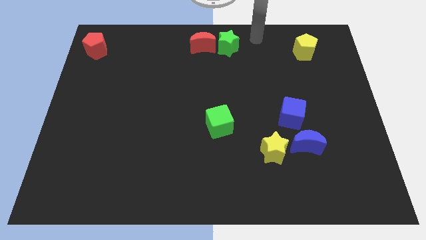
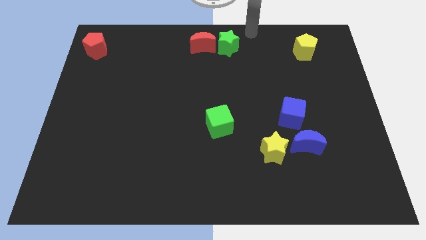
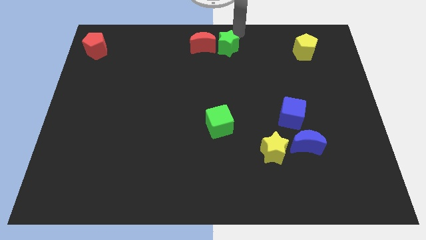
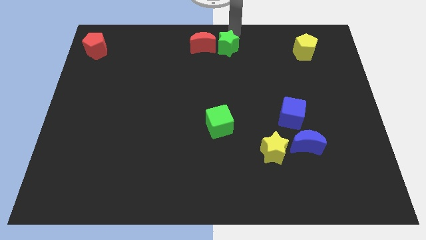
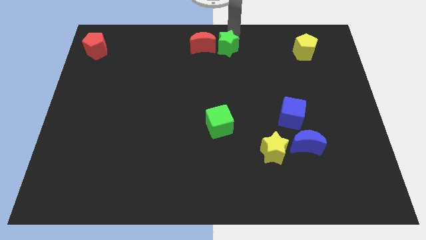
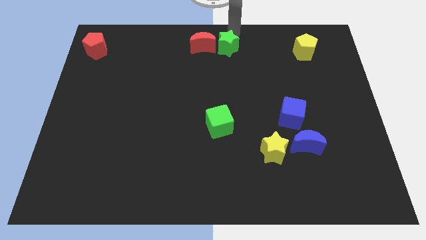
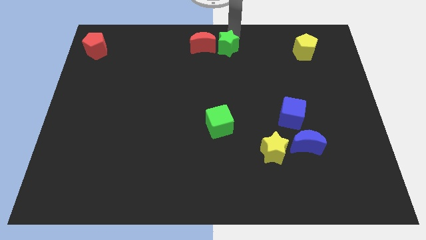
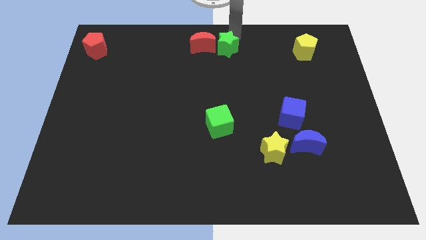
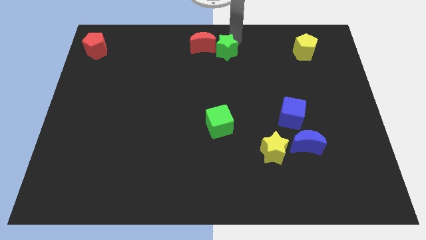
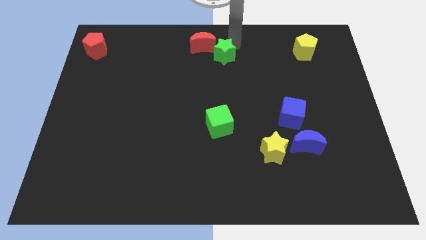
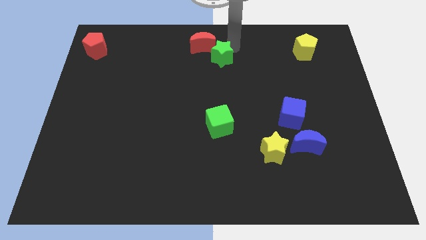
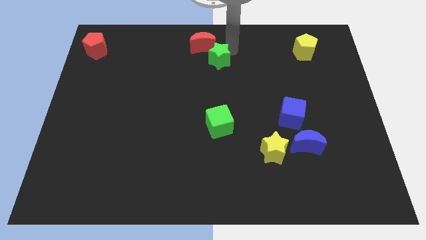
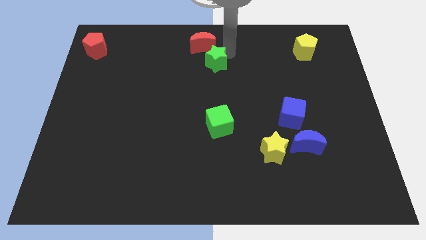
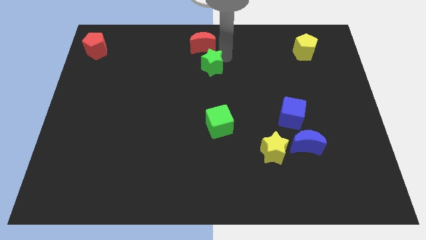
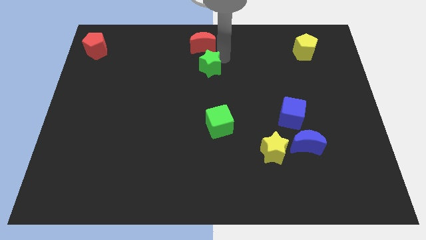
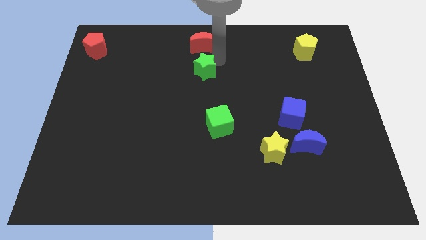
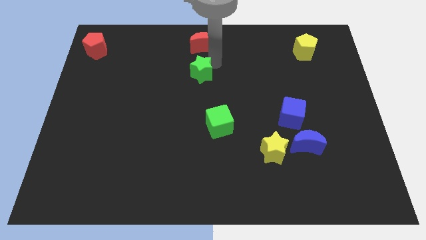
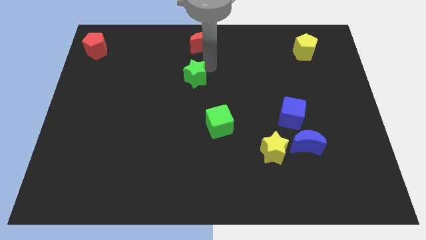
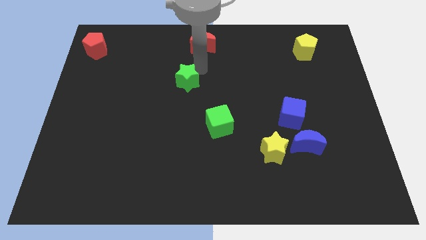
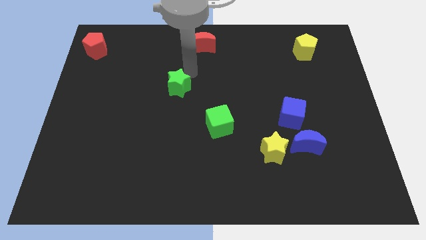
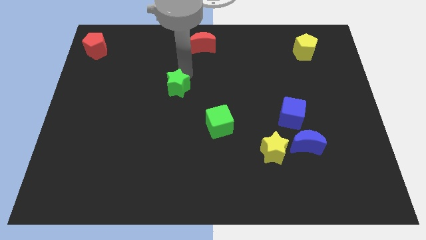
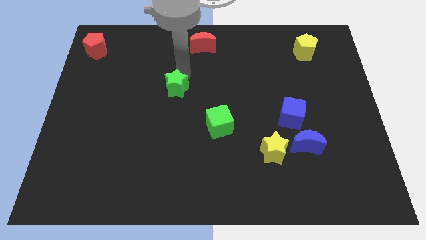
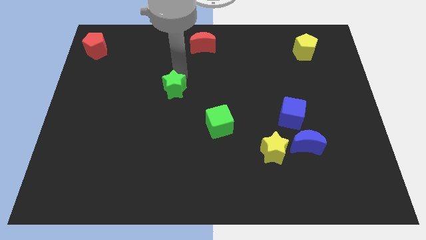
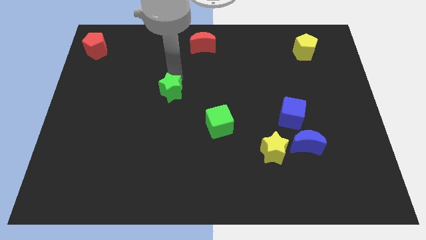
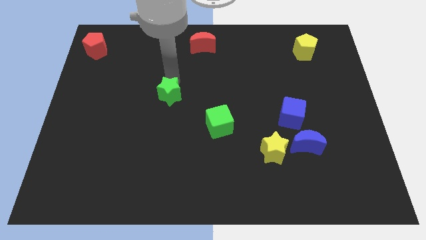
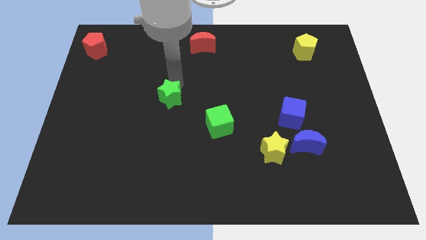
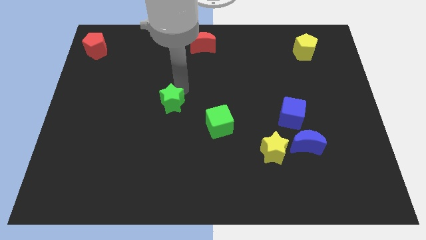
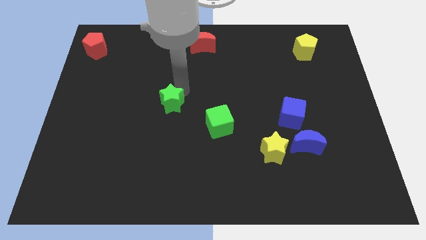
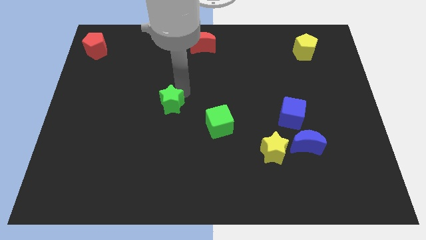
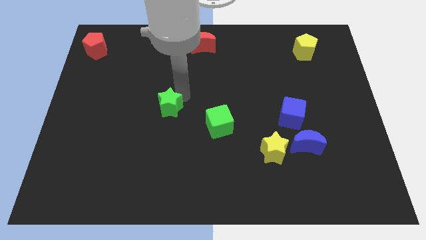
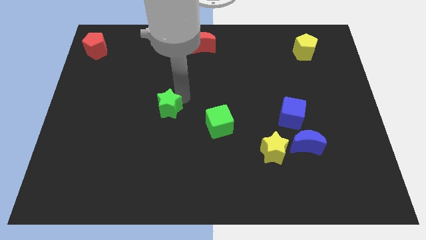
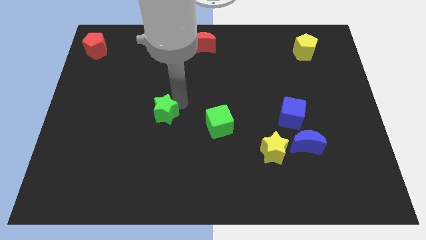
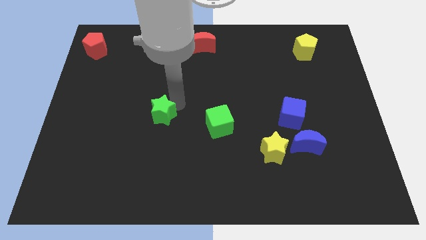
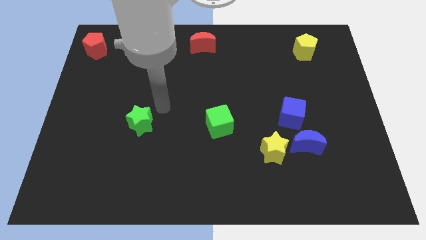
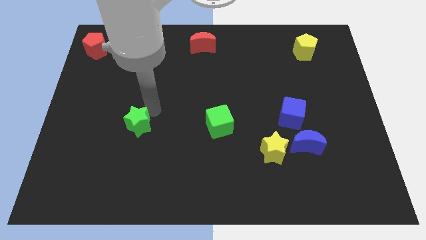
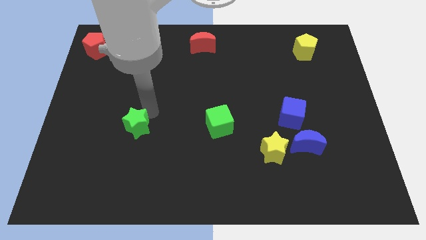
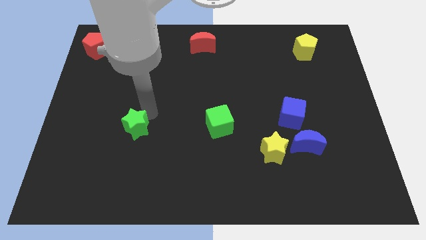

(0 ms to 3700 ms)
move the green star away from the red crescent

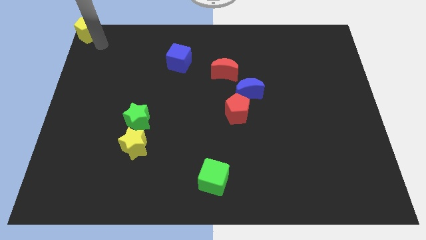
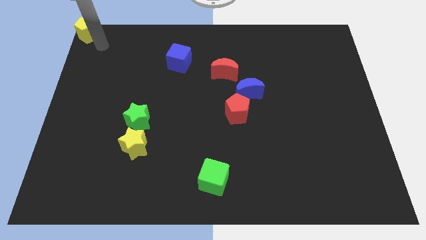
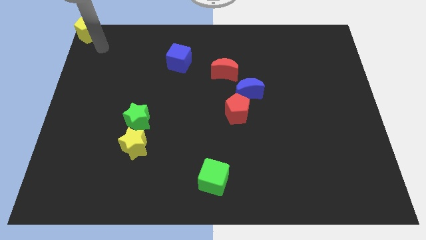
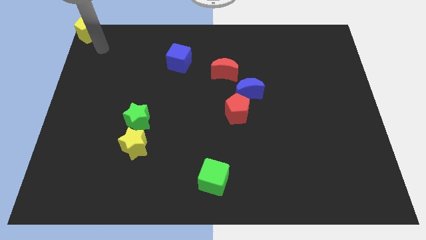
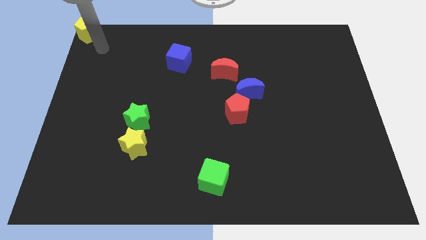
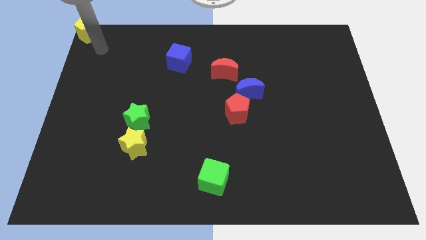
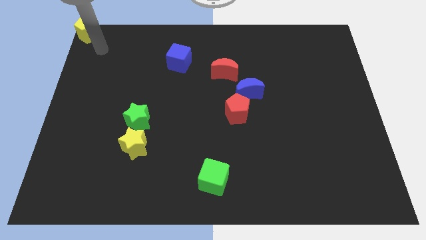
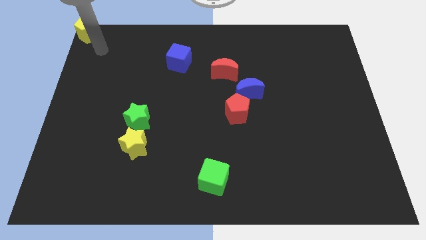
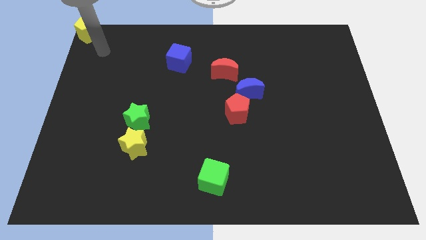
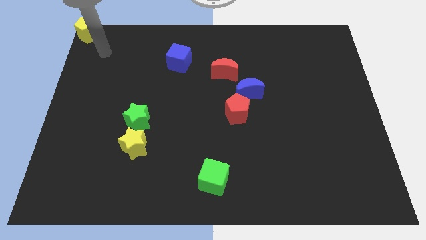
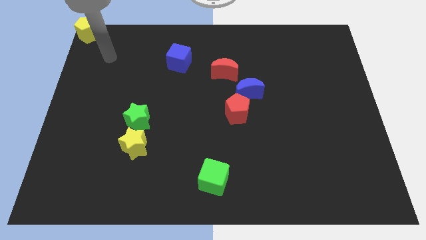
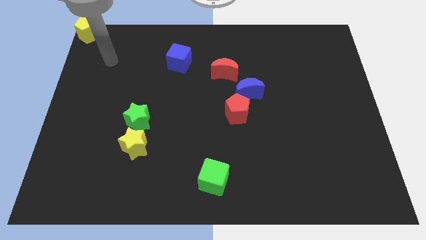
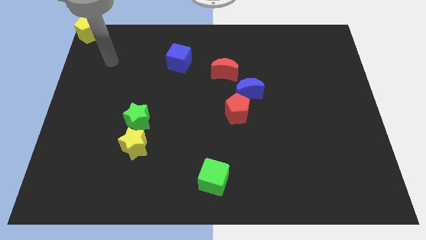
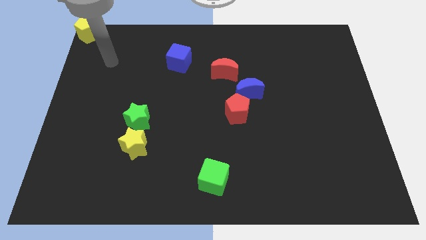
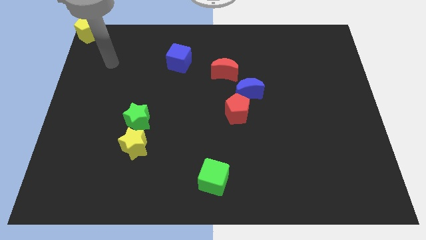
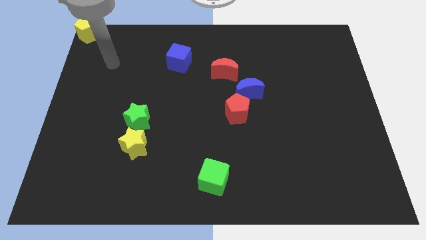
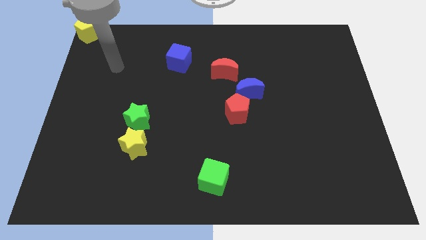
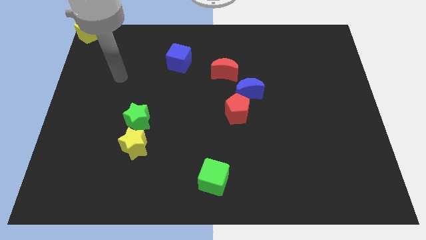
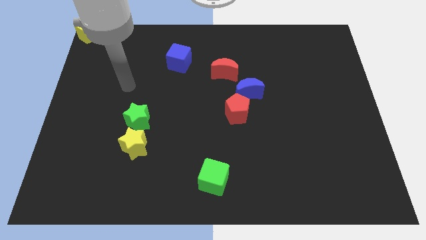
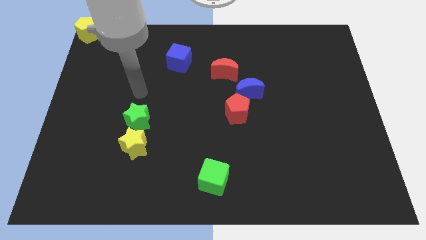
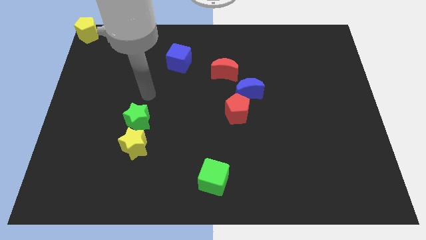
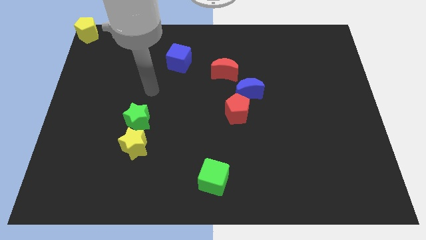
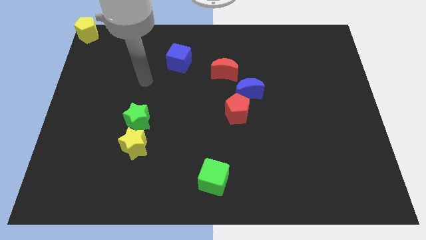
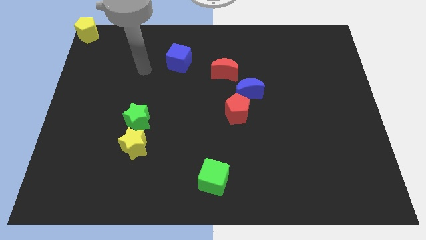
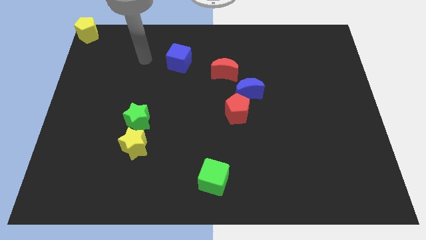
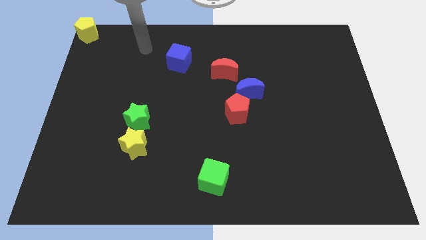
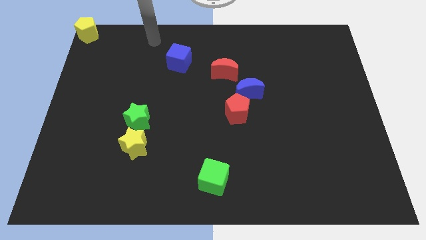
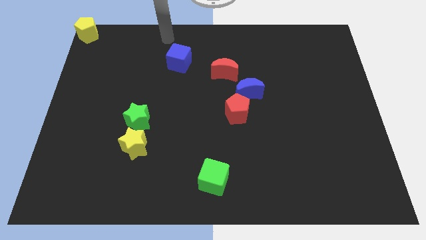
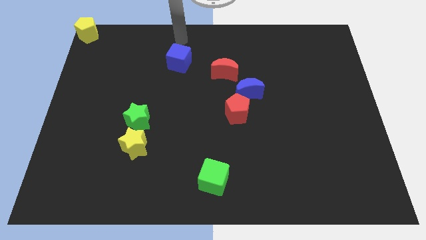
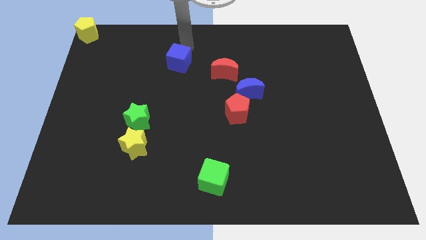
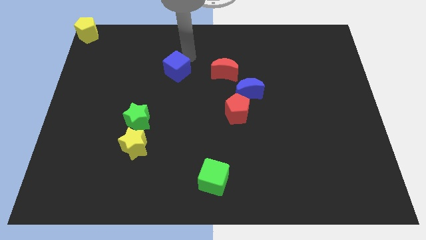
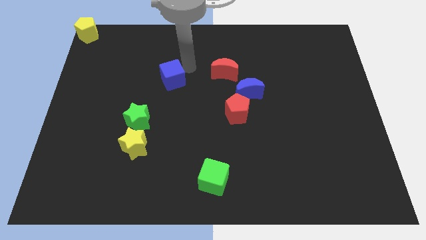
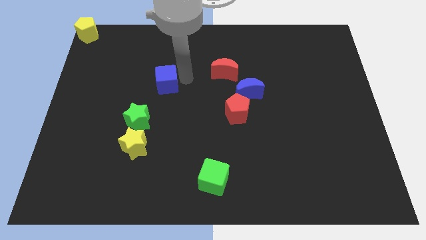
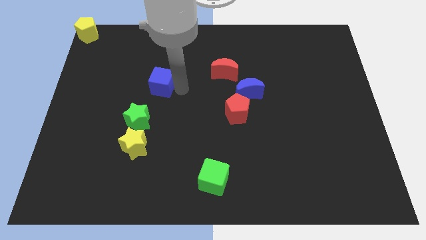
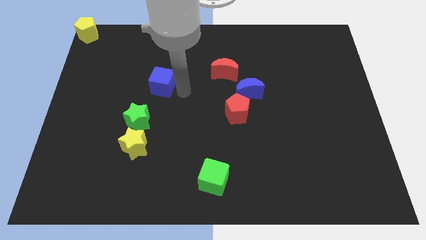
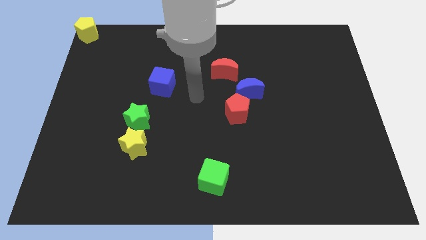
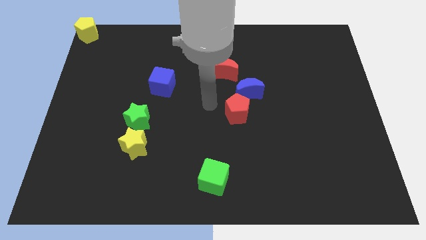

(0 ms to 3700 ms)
push the blue cube to the bottom of the board

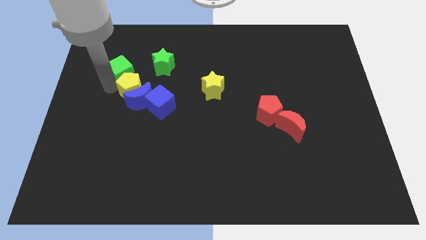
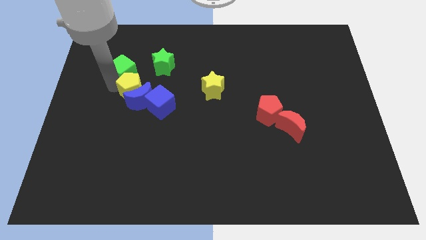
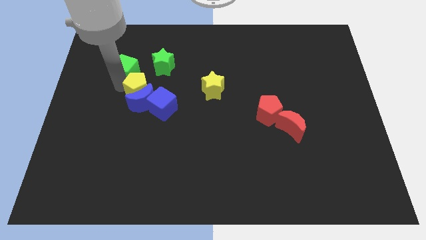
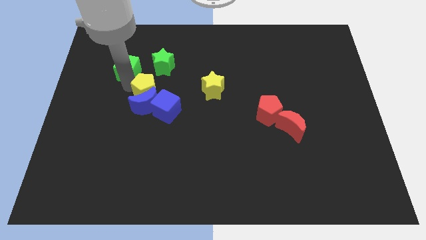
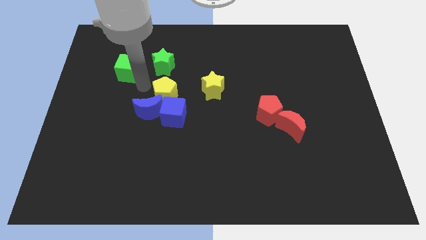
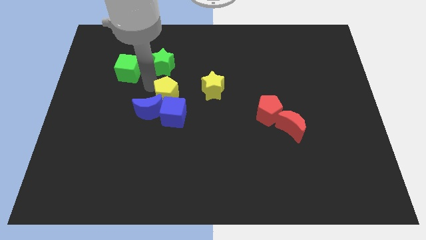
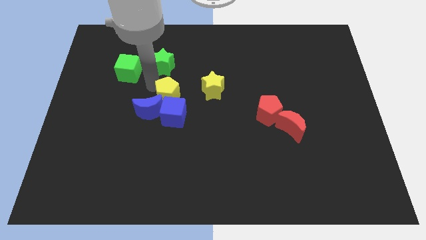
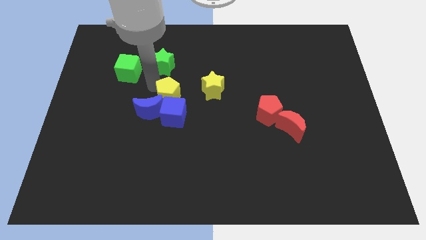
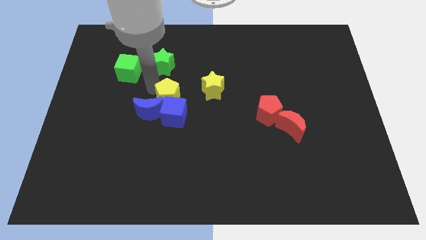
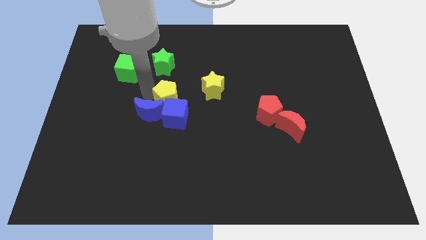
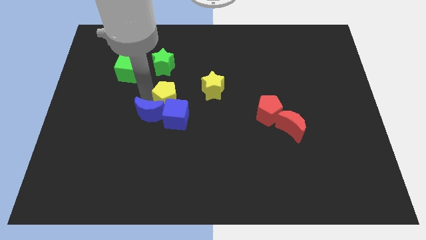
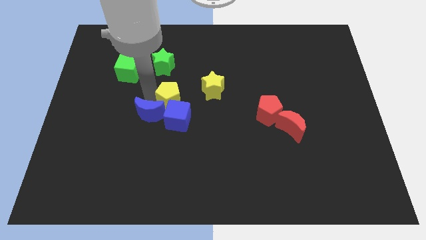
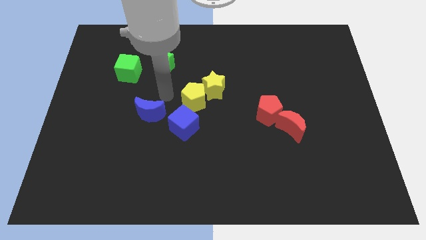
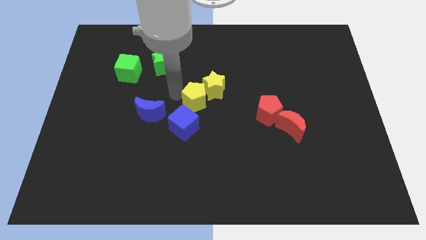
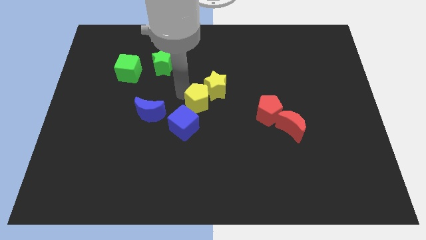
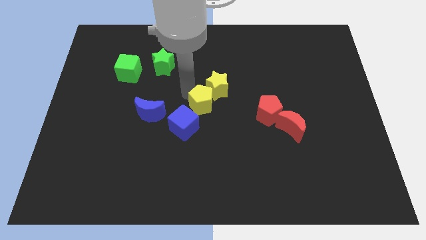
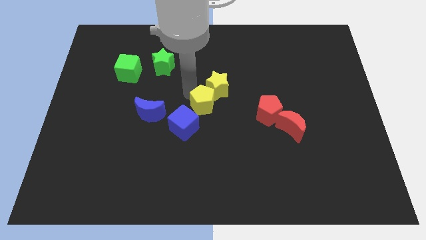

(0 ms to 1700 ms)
place the yellow pentagon above the blue cube
